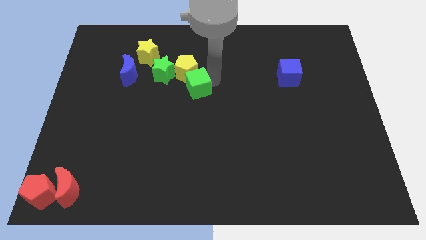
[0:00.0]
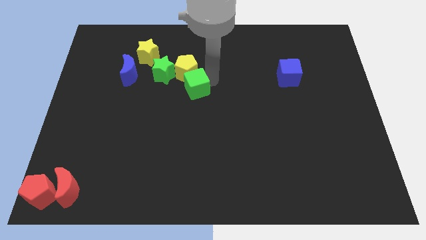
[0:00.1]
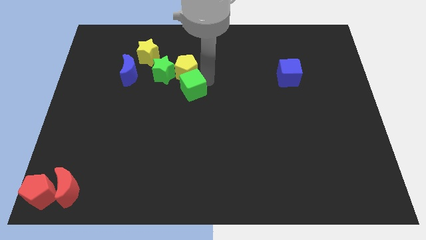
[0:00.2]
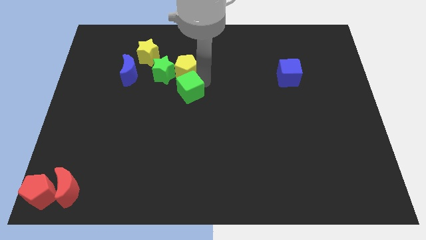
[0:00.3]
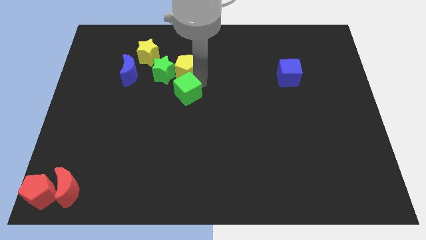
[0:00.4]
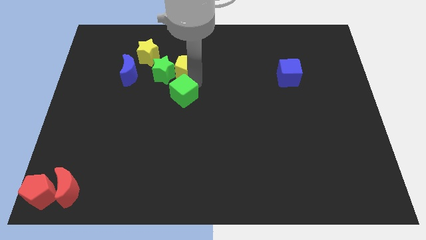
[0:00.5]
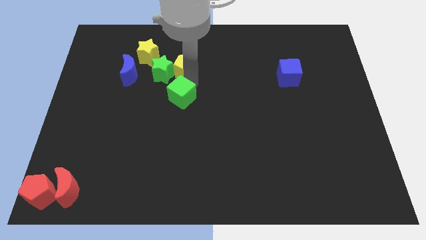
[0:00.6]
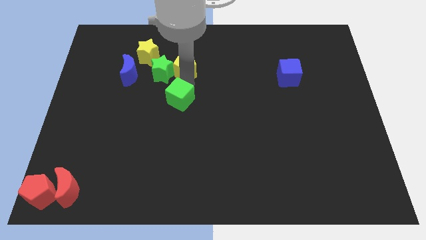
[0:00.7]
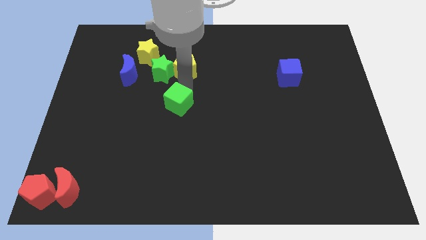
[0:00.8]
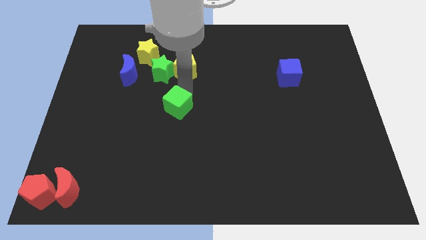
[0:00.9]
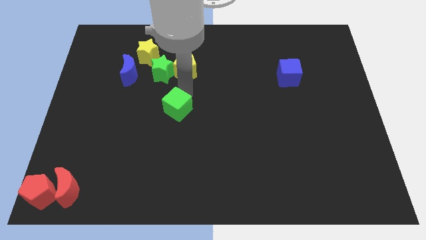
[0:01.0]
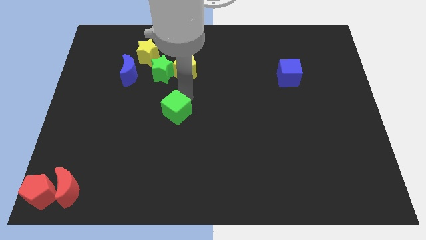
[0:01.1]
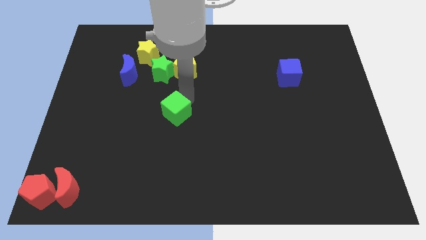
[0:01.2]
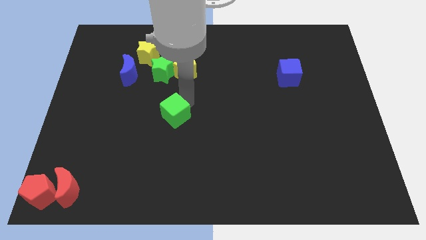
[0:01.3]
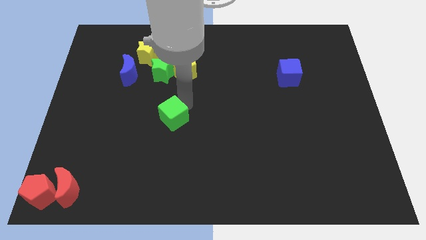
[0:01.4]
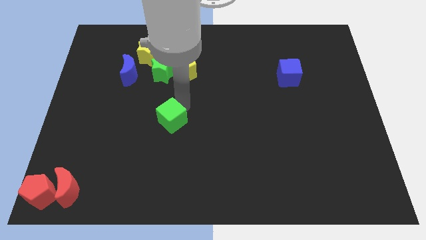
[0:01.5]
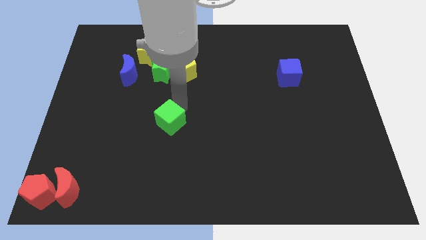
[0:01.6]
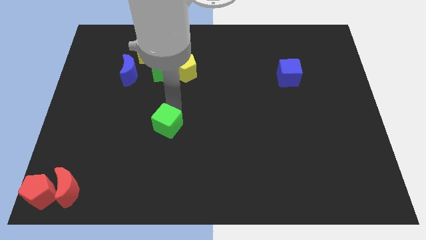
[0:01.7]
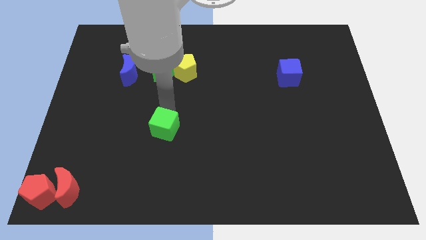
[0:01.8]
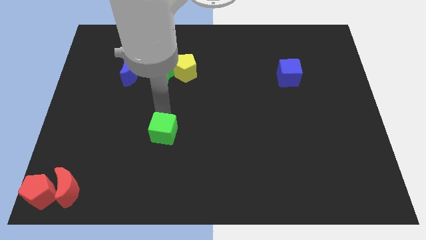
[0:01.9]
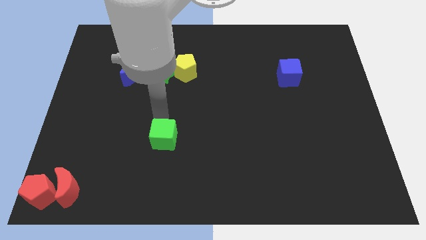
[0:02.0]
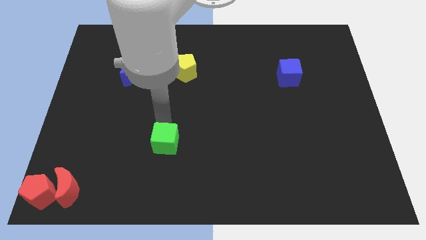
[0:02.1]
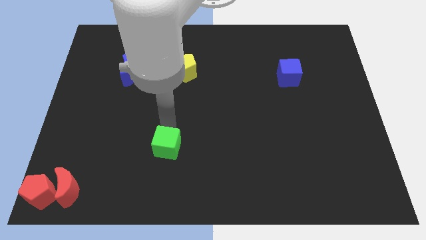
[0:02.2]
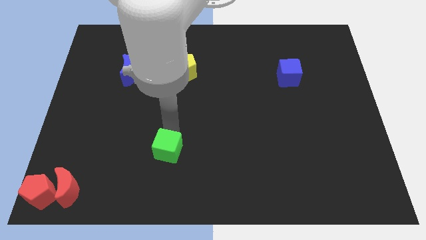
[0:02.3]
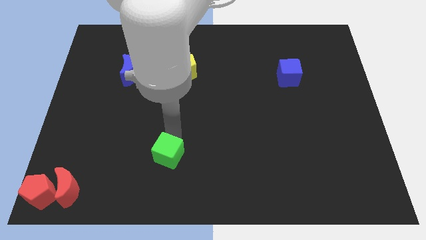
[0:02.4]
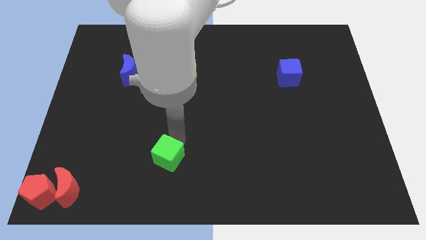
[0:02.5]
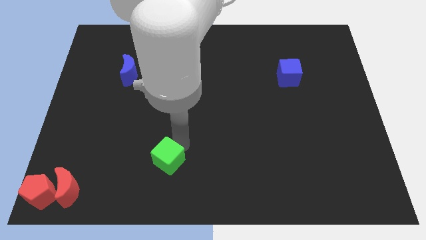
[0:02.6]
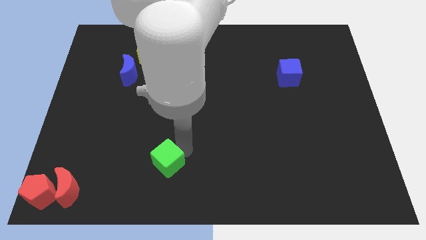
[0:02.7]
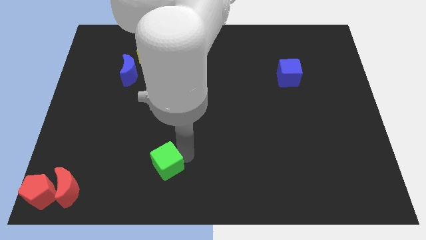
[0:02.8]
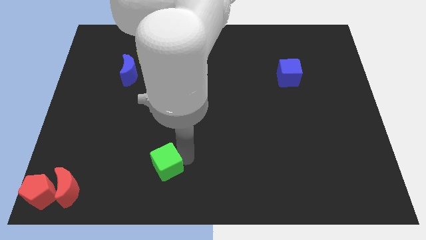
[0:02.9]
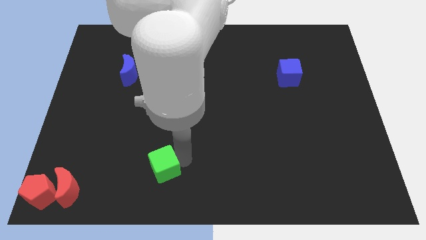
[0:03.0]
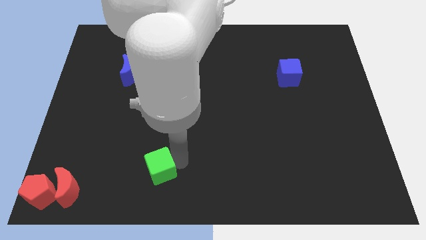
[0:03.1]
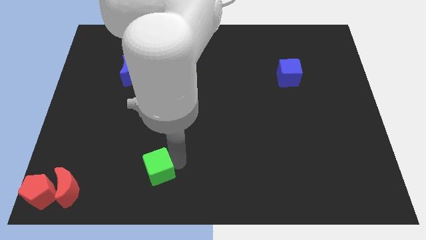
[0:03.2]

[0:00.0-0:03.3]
separate the green cube from the yellow pentagon

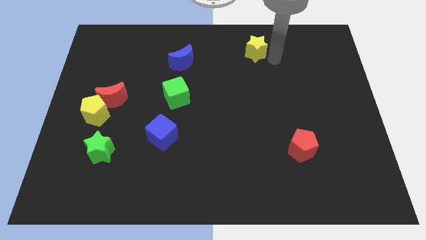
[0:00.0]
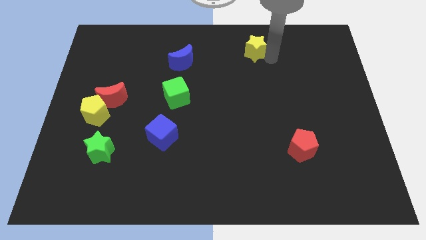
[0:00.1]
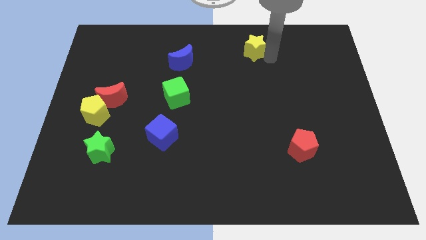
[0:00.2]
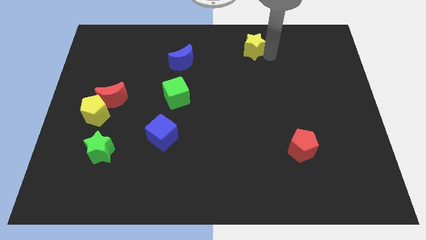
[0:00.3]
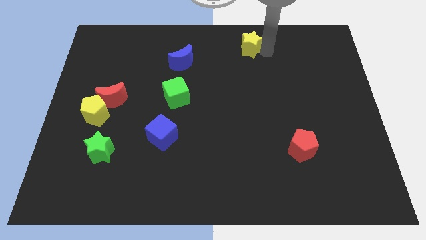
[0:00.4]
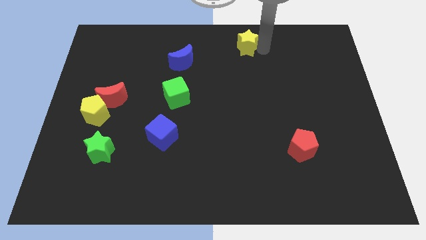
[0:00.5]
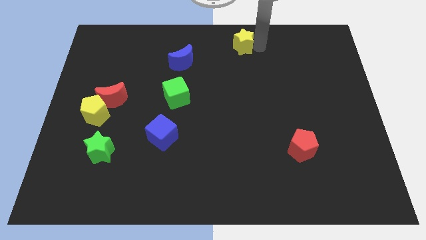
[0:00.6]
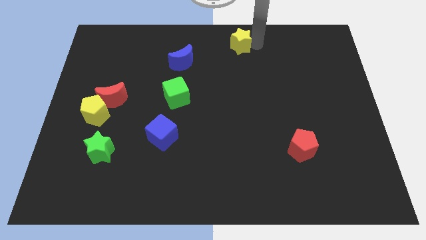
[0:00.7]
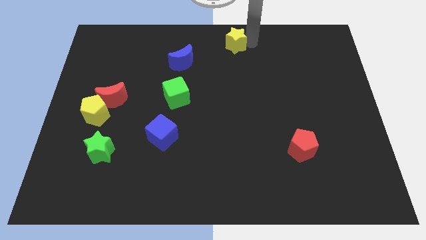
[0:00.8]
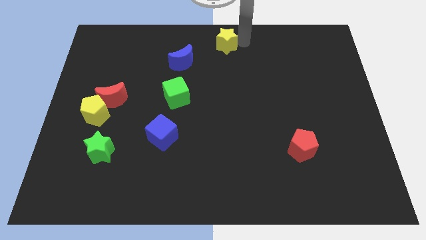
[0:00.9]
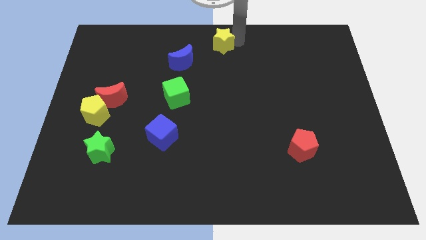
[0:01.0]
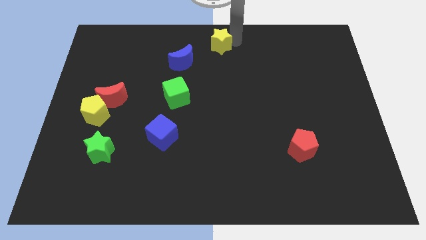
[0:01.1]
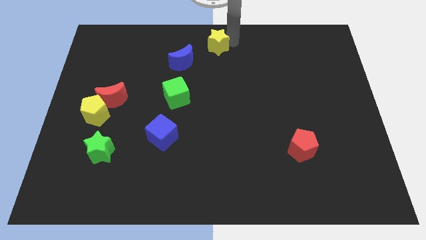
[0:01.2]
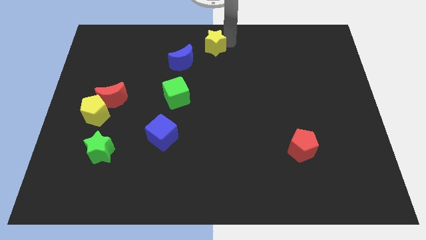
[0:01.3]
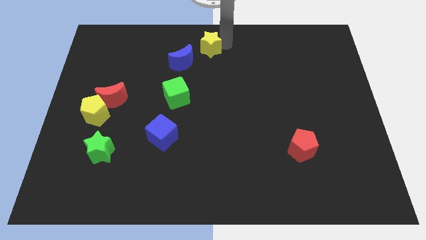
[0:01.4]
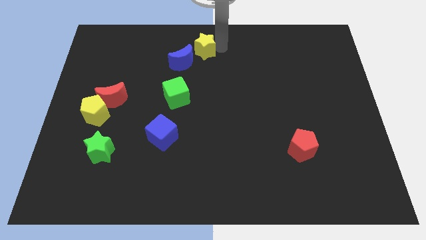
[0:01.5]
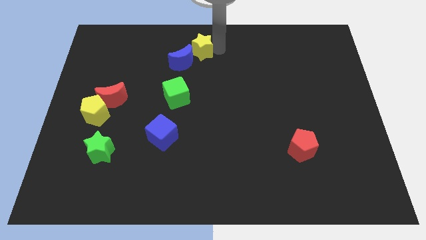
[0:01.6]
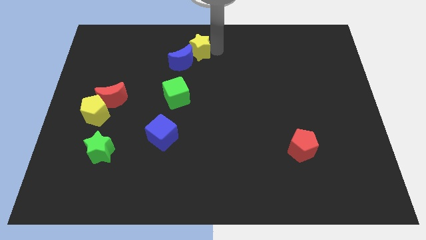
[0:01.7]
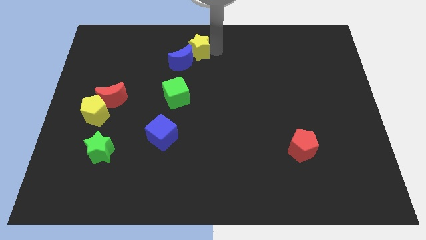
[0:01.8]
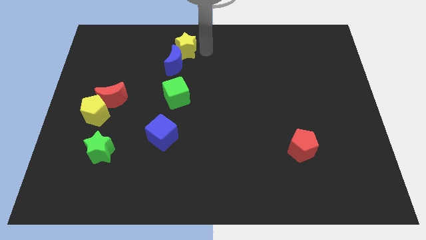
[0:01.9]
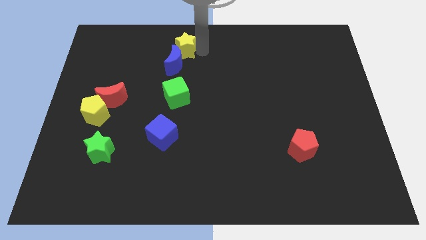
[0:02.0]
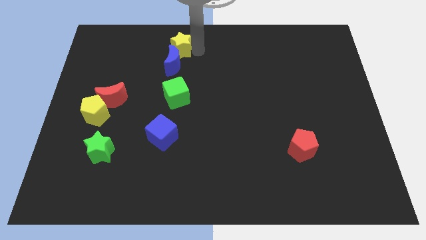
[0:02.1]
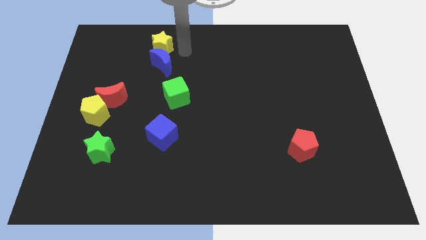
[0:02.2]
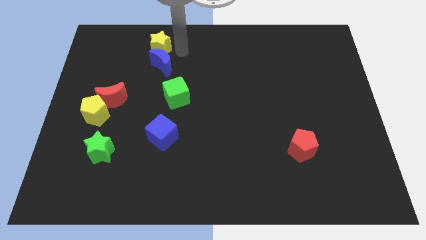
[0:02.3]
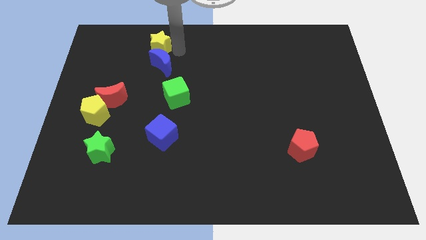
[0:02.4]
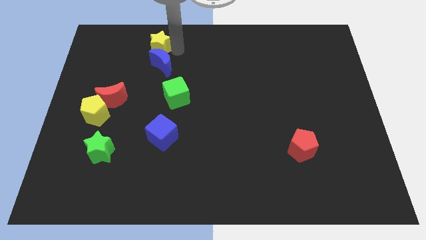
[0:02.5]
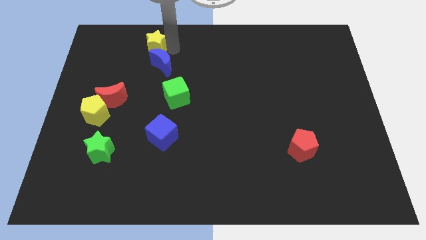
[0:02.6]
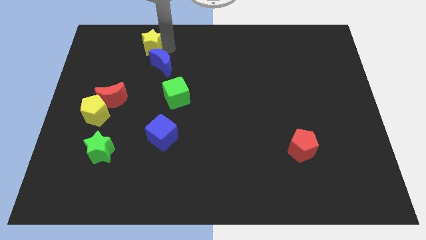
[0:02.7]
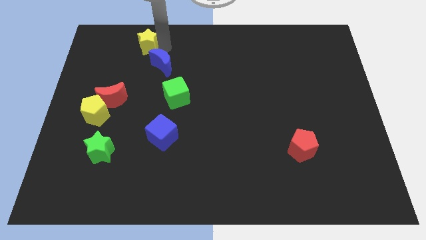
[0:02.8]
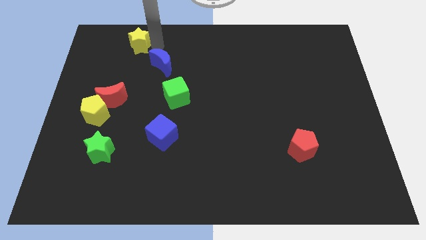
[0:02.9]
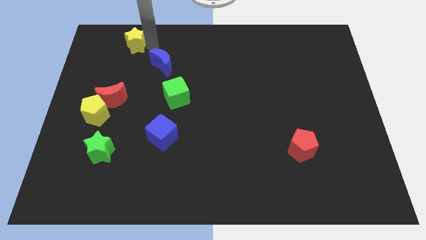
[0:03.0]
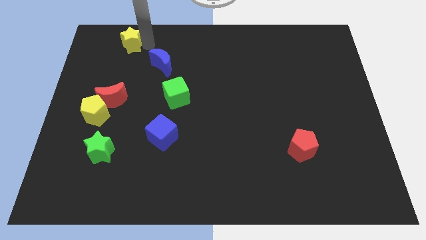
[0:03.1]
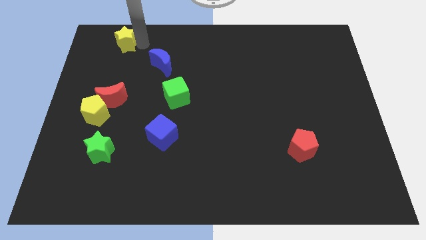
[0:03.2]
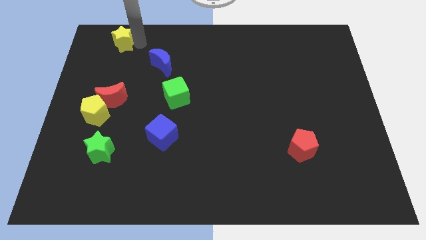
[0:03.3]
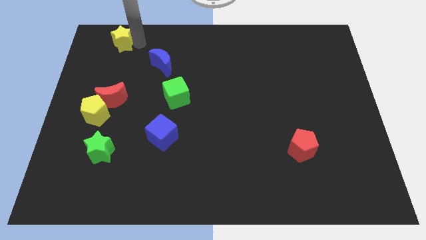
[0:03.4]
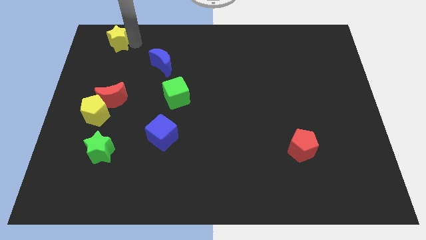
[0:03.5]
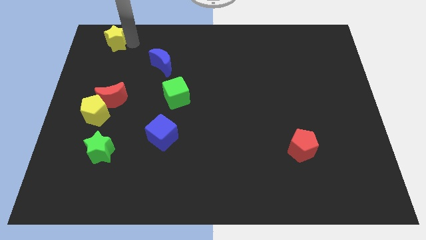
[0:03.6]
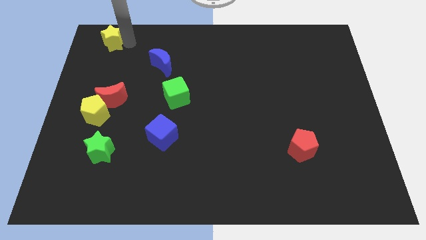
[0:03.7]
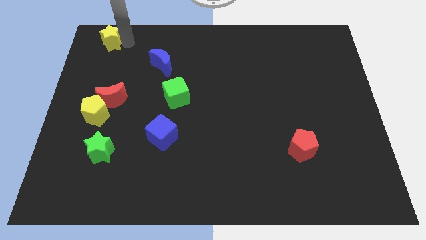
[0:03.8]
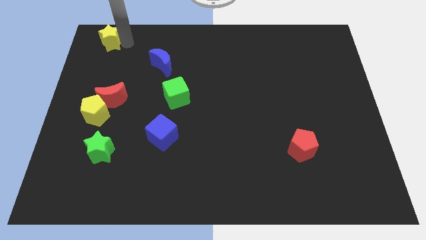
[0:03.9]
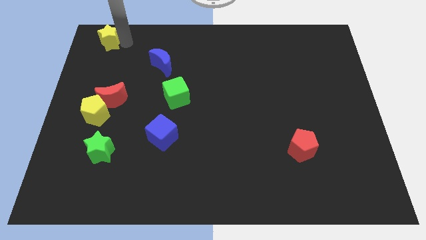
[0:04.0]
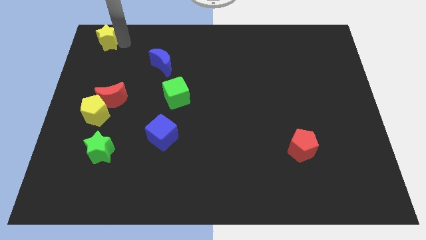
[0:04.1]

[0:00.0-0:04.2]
move the yellow star to the left of the board

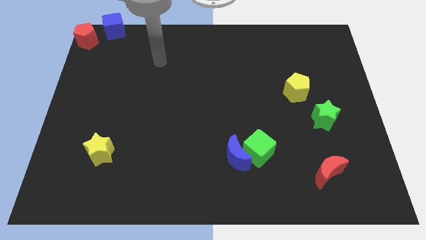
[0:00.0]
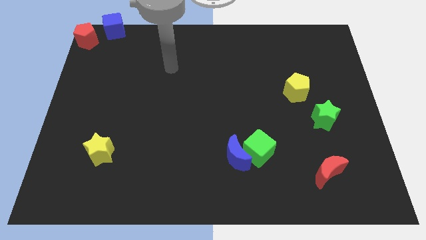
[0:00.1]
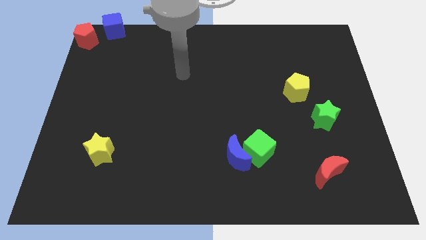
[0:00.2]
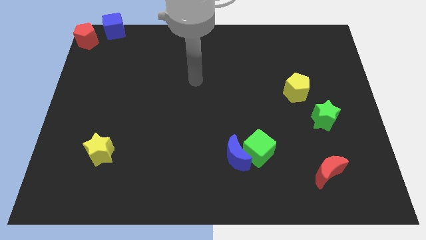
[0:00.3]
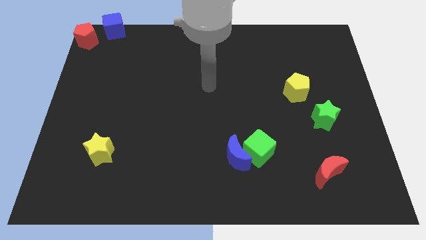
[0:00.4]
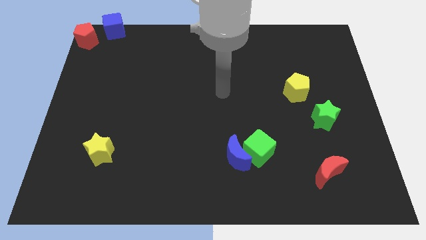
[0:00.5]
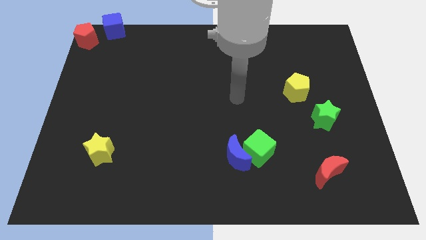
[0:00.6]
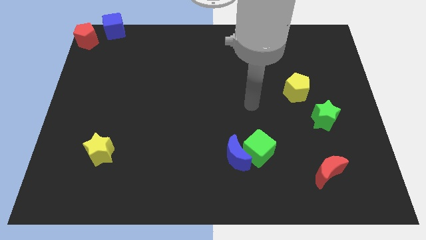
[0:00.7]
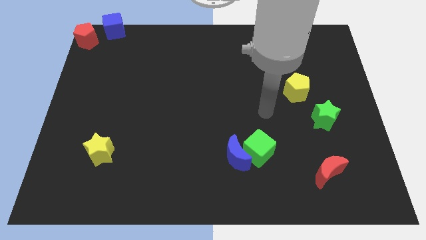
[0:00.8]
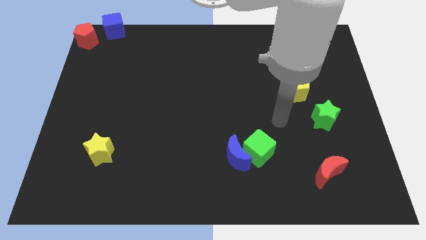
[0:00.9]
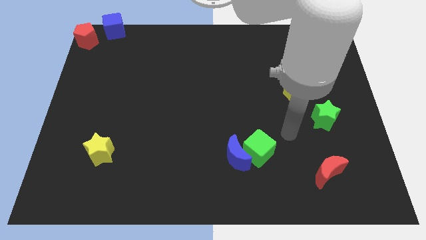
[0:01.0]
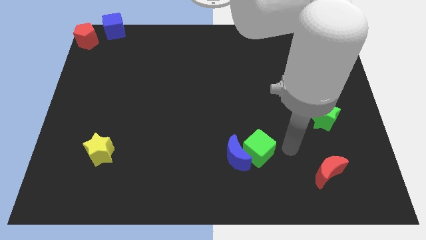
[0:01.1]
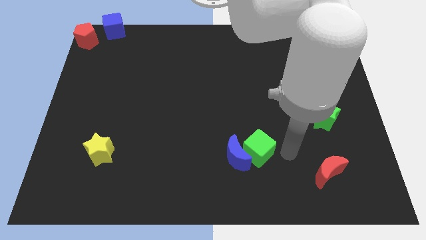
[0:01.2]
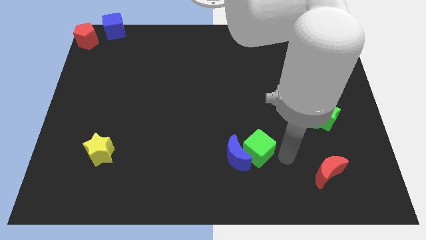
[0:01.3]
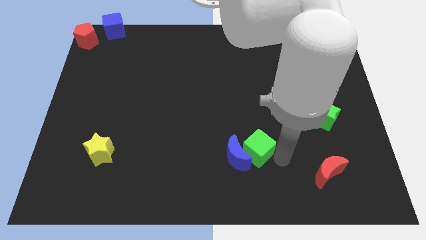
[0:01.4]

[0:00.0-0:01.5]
move arm towards green cube

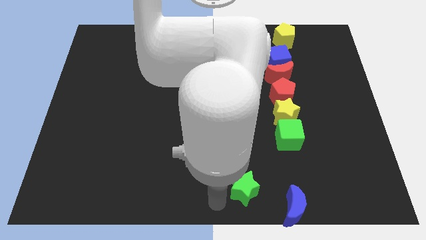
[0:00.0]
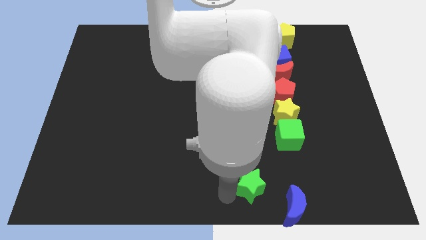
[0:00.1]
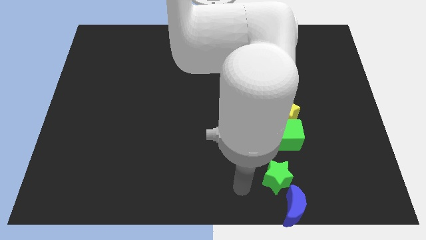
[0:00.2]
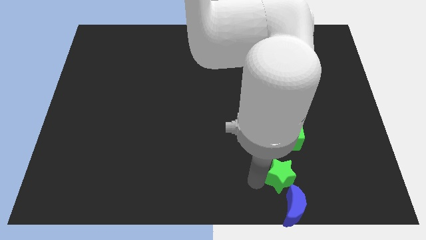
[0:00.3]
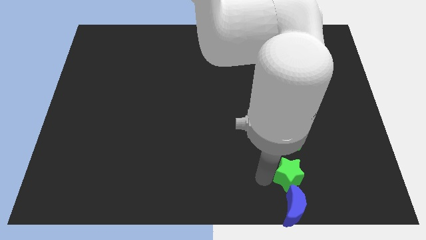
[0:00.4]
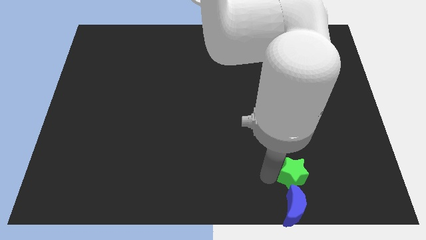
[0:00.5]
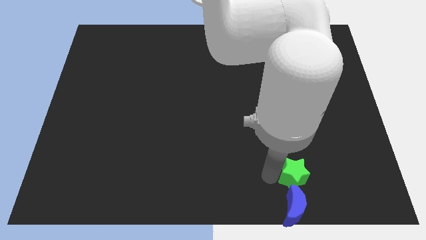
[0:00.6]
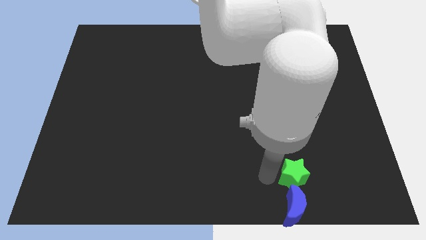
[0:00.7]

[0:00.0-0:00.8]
place the green star above the blue moon
